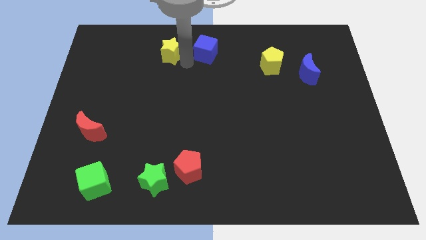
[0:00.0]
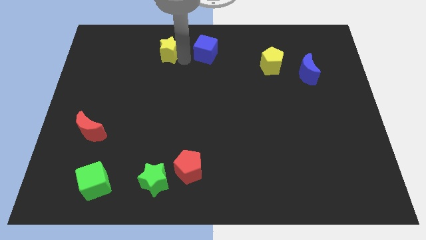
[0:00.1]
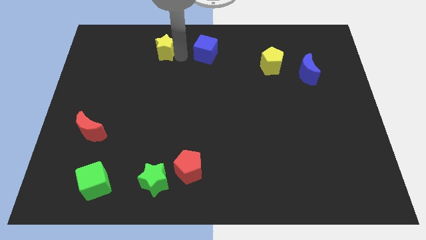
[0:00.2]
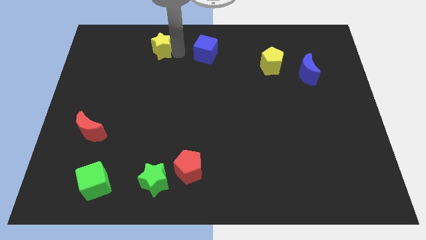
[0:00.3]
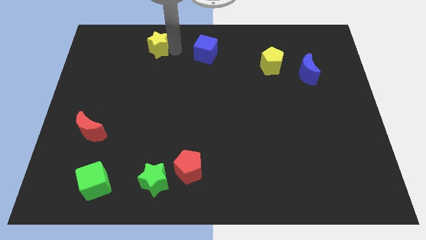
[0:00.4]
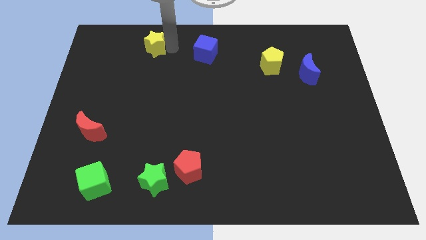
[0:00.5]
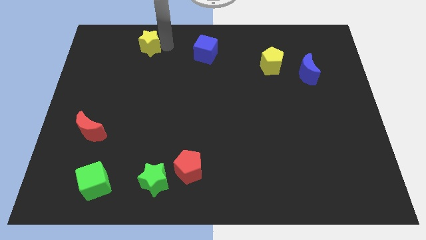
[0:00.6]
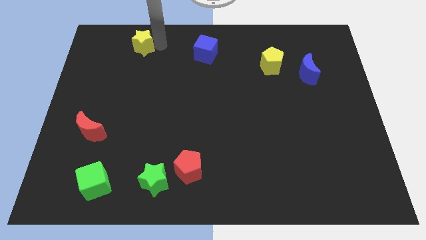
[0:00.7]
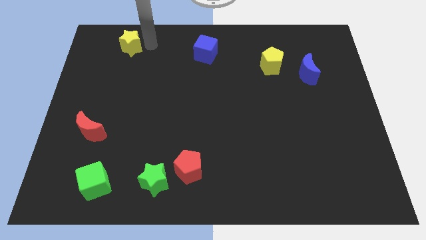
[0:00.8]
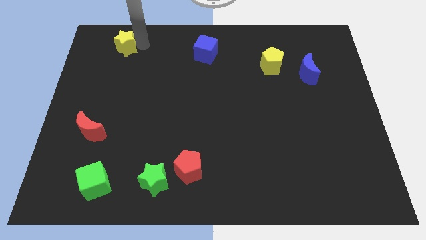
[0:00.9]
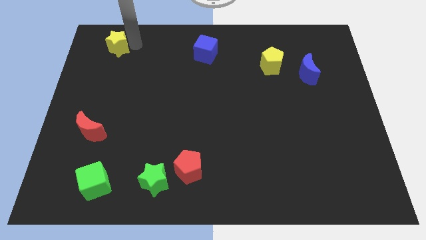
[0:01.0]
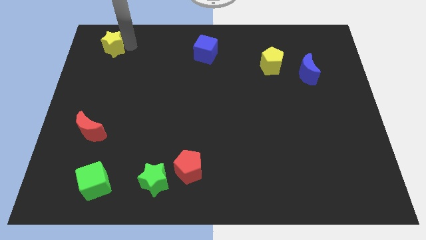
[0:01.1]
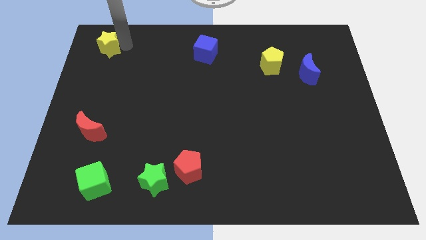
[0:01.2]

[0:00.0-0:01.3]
move the yellow star to the top left of the board

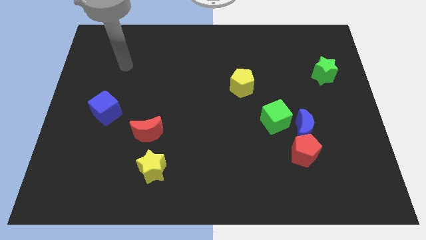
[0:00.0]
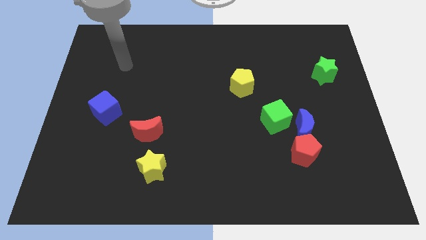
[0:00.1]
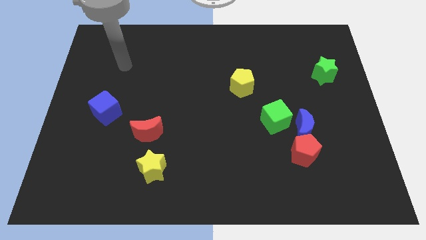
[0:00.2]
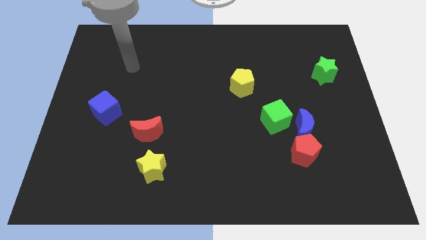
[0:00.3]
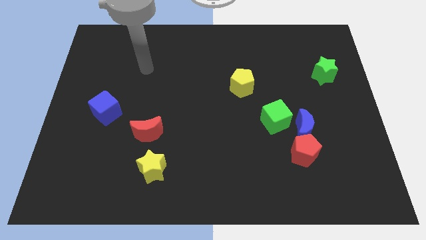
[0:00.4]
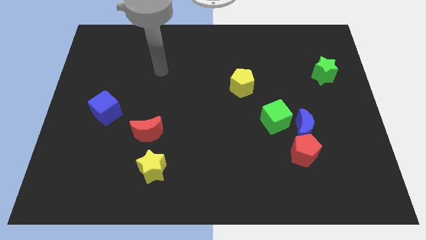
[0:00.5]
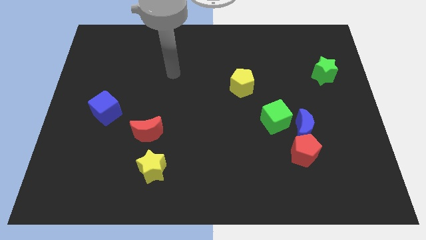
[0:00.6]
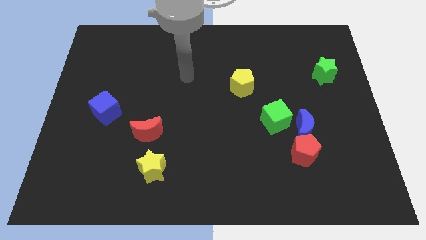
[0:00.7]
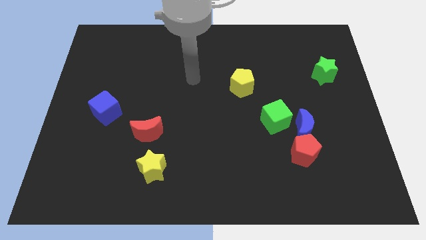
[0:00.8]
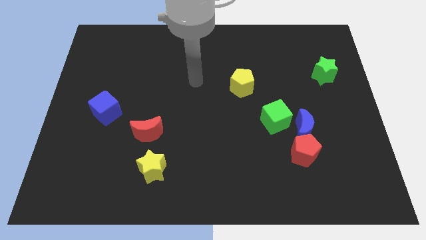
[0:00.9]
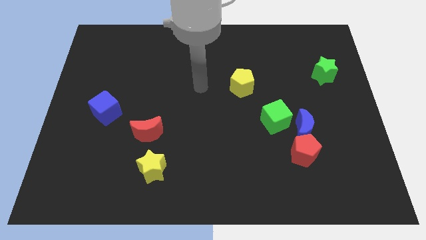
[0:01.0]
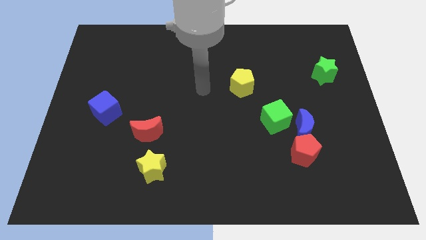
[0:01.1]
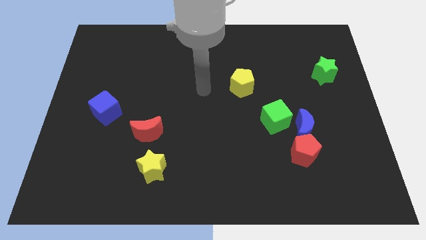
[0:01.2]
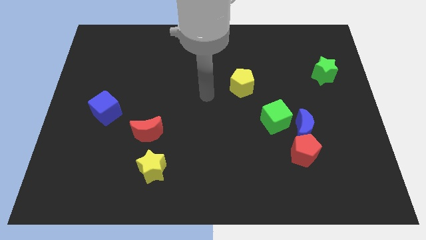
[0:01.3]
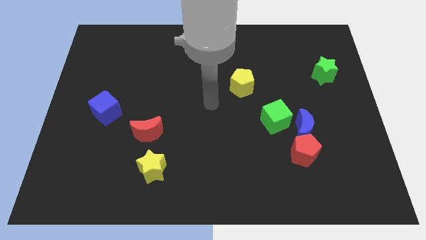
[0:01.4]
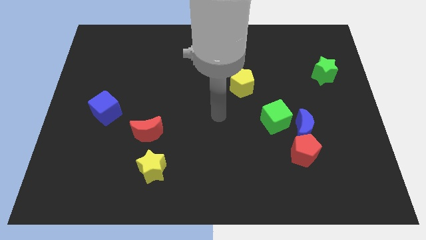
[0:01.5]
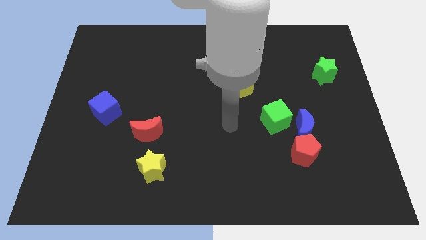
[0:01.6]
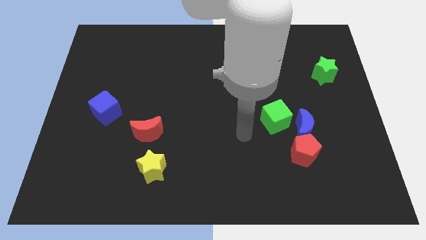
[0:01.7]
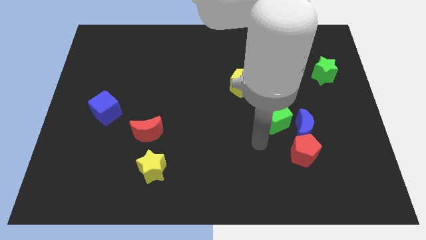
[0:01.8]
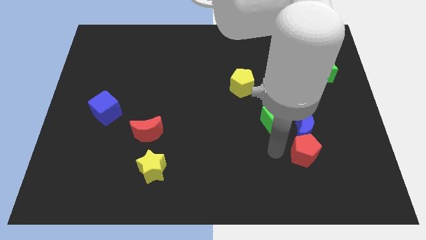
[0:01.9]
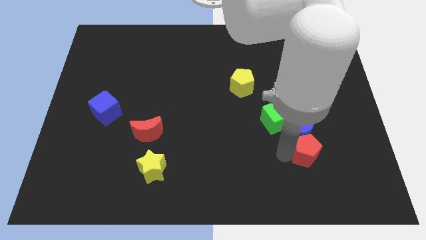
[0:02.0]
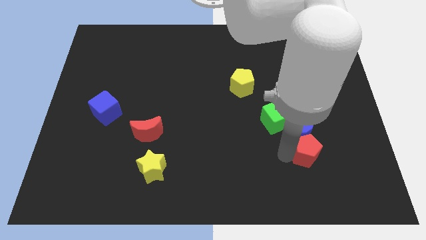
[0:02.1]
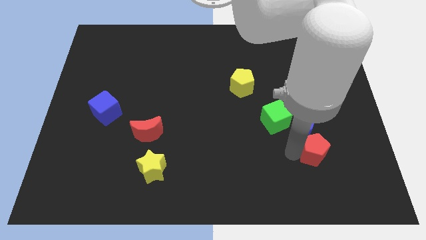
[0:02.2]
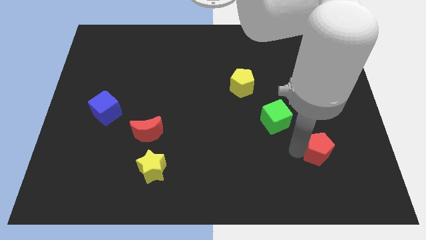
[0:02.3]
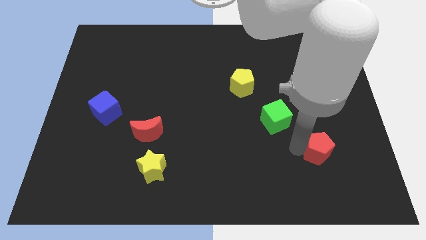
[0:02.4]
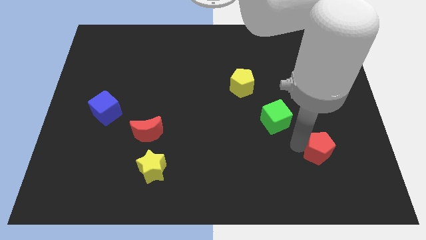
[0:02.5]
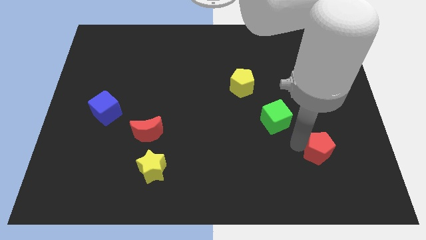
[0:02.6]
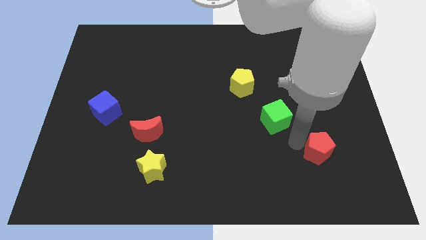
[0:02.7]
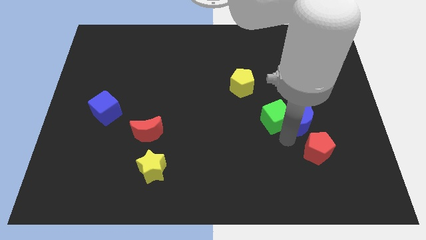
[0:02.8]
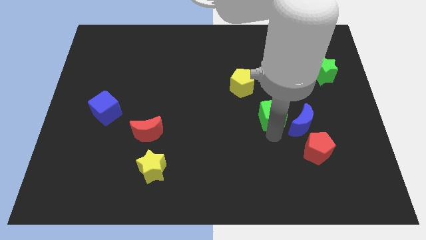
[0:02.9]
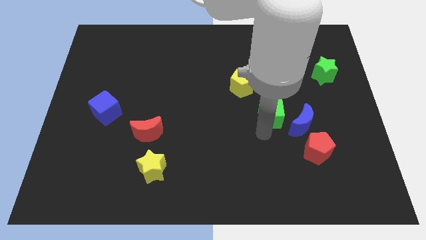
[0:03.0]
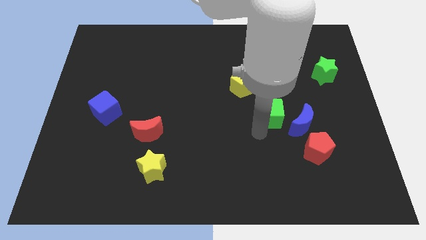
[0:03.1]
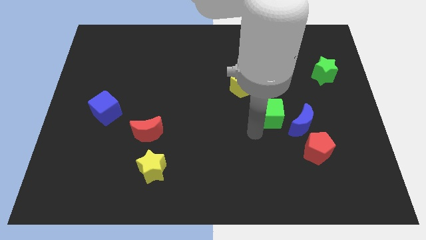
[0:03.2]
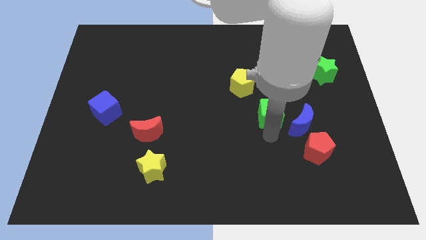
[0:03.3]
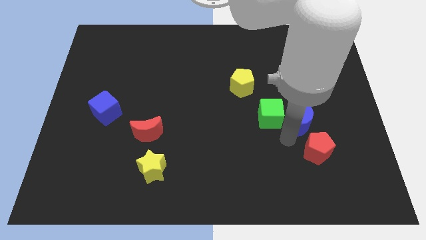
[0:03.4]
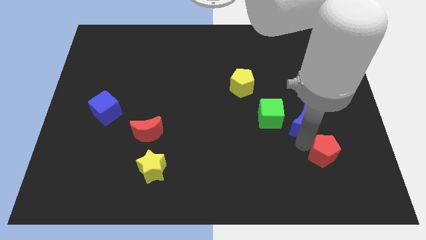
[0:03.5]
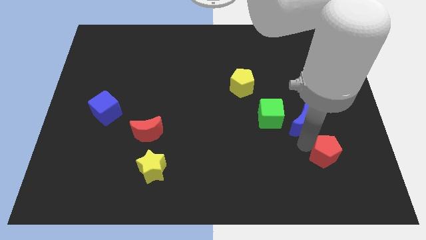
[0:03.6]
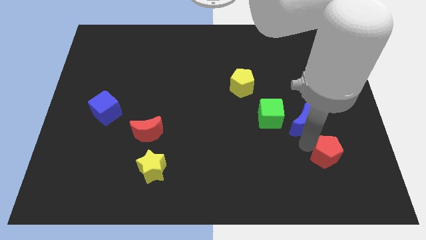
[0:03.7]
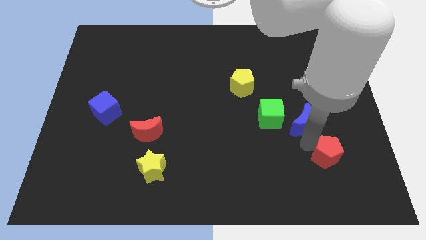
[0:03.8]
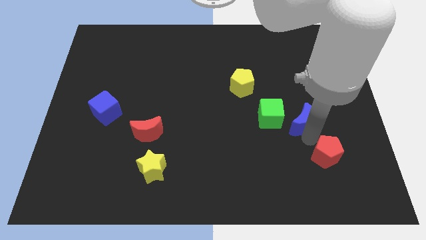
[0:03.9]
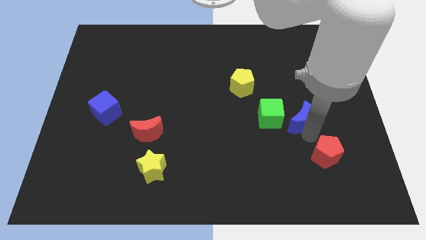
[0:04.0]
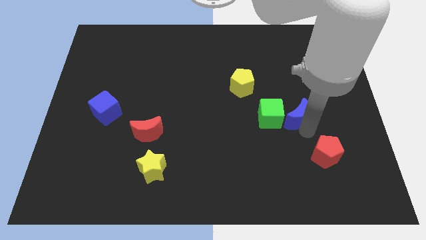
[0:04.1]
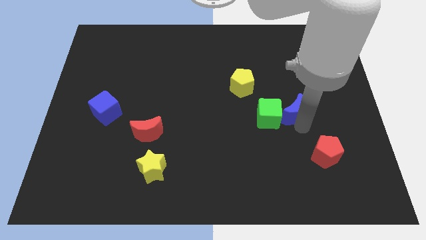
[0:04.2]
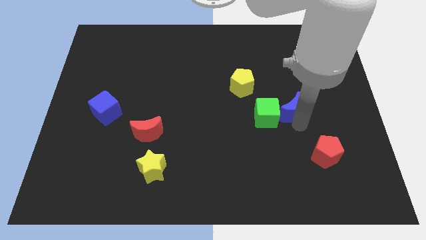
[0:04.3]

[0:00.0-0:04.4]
put the blue moon into the green cube

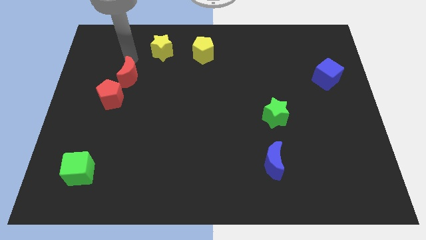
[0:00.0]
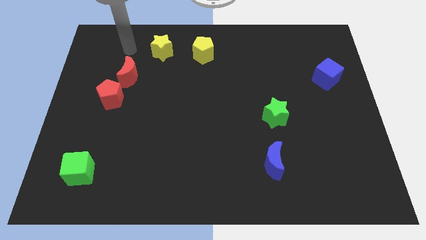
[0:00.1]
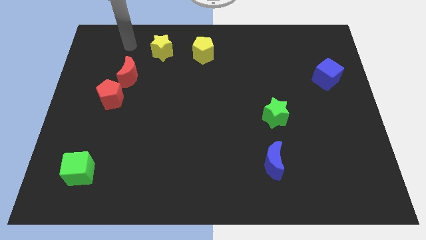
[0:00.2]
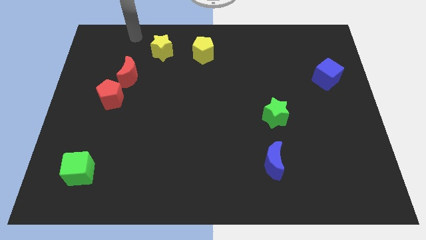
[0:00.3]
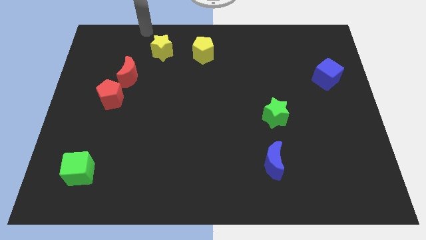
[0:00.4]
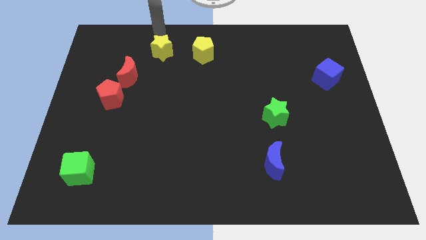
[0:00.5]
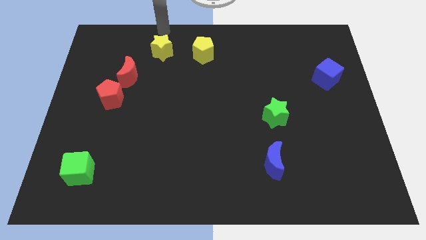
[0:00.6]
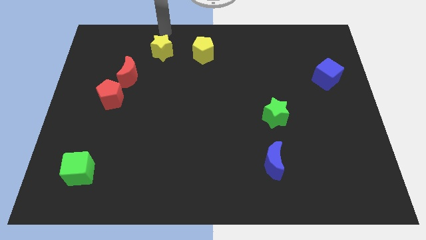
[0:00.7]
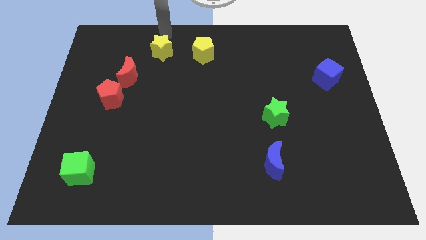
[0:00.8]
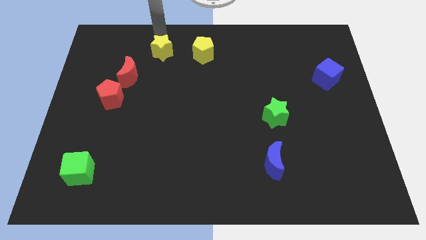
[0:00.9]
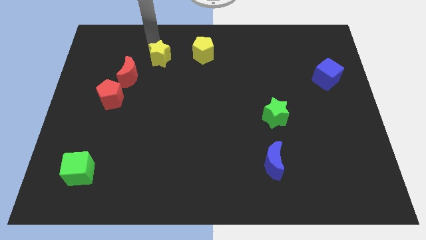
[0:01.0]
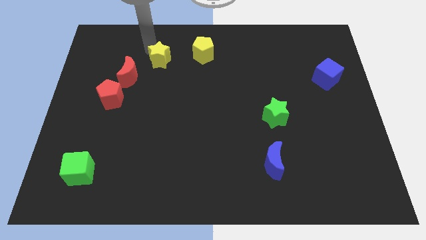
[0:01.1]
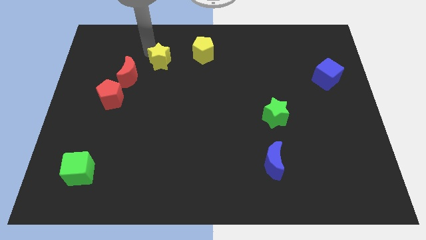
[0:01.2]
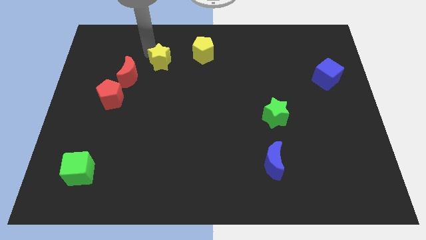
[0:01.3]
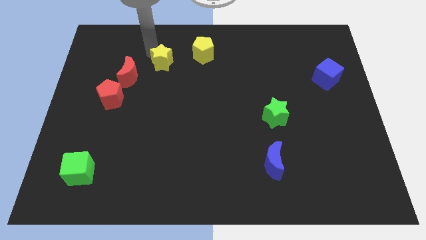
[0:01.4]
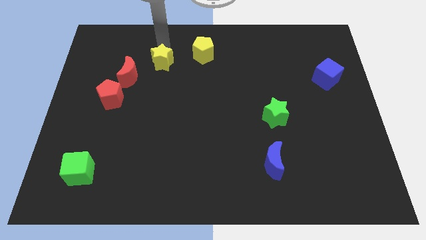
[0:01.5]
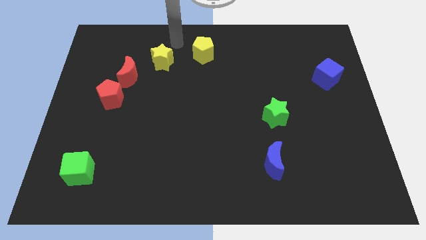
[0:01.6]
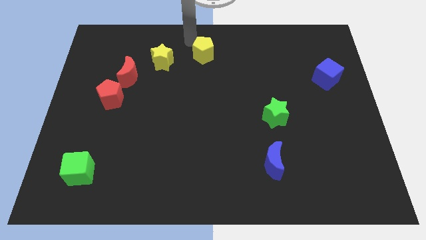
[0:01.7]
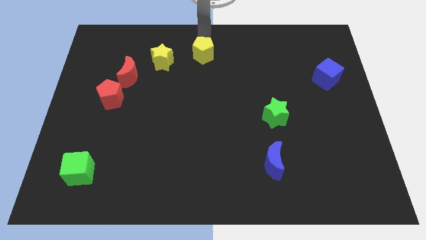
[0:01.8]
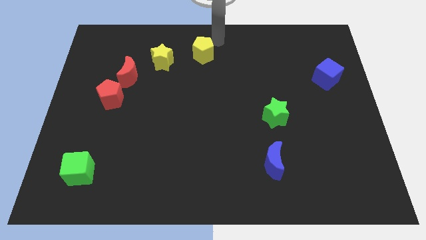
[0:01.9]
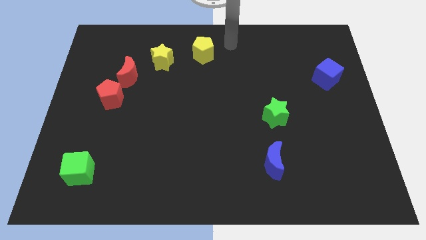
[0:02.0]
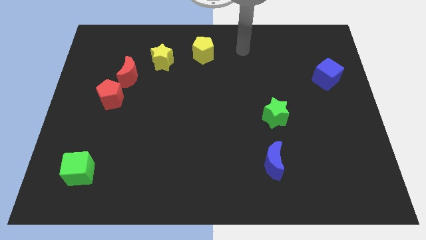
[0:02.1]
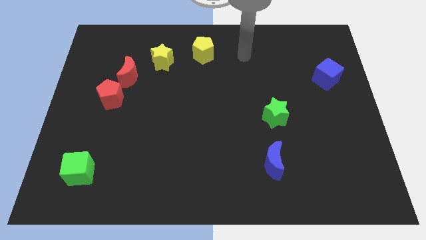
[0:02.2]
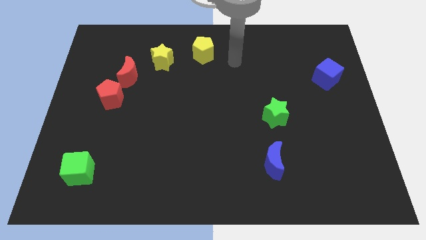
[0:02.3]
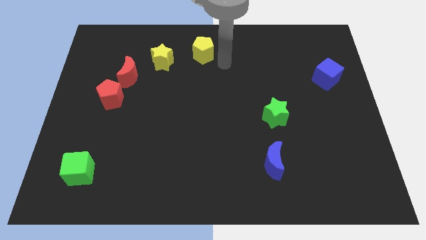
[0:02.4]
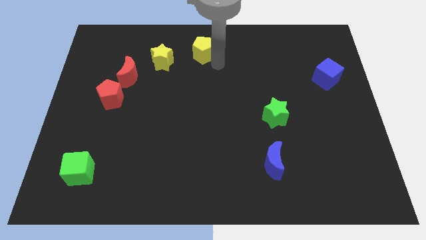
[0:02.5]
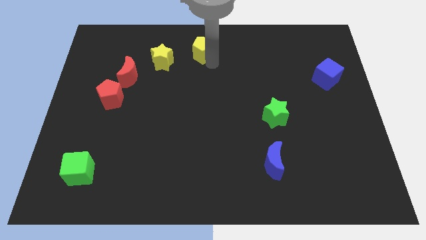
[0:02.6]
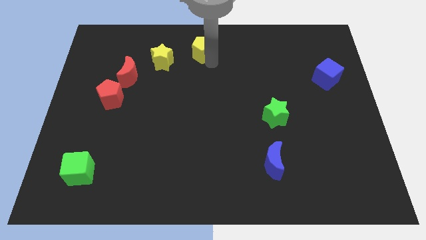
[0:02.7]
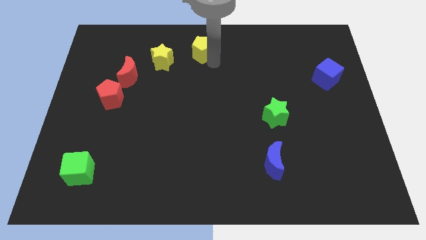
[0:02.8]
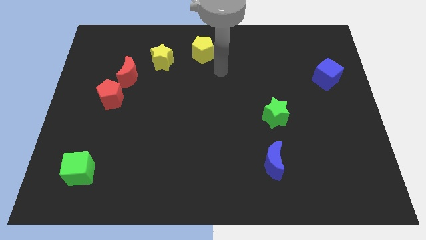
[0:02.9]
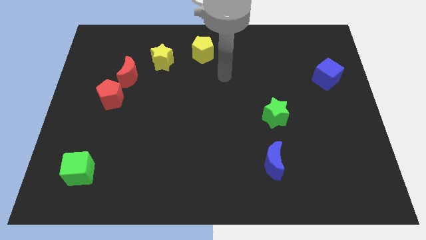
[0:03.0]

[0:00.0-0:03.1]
move yellow star down a bit

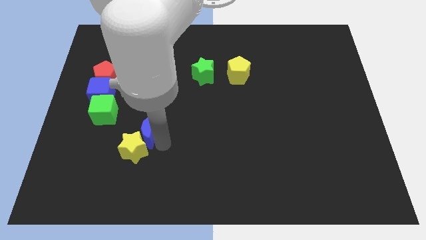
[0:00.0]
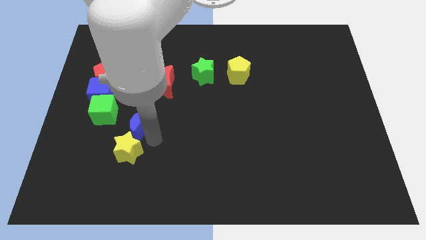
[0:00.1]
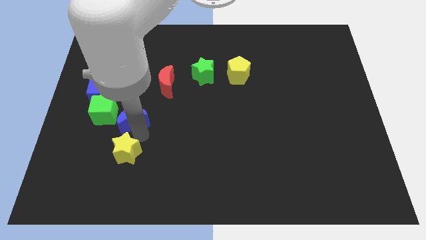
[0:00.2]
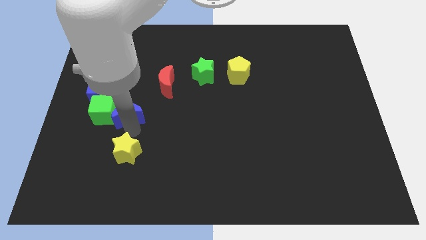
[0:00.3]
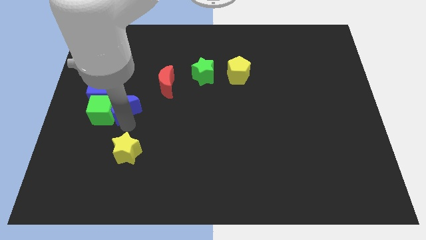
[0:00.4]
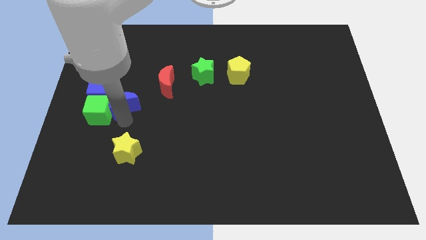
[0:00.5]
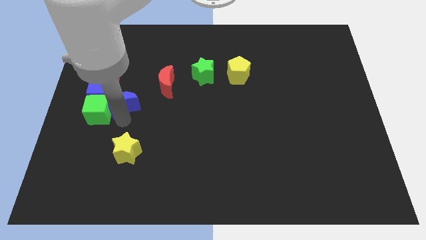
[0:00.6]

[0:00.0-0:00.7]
push blue crescent beside green cube
